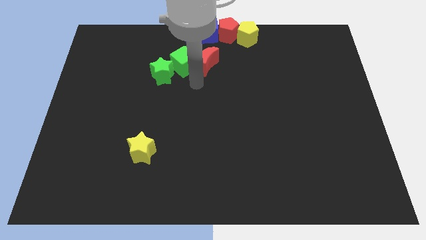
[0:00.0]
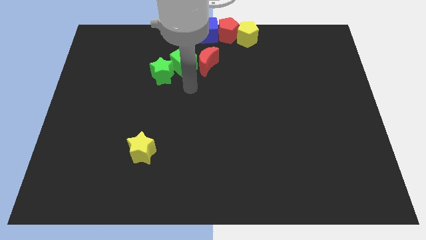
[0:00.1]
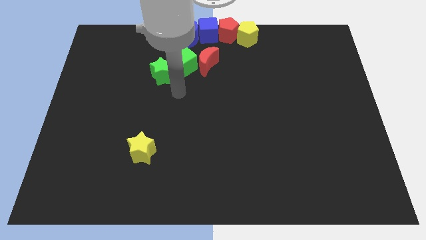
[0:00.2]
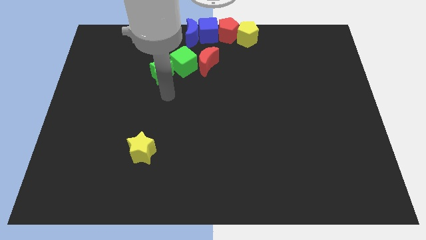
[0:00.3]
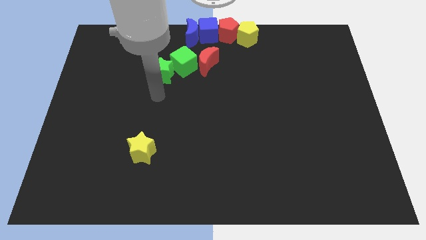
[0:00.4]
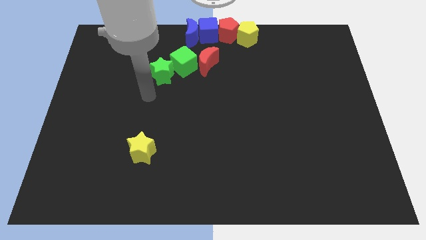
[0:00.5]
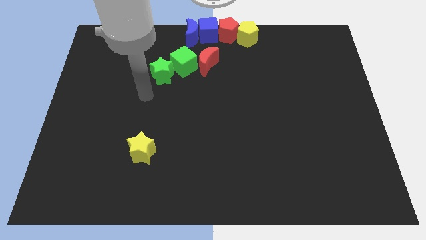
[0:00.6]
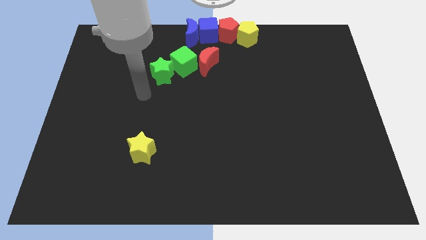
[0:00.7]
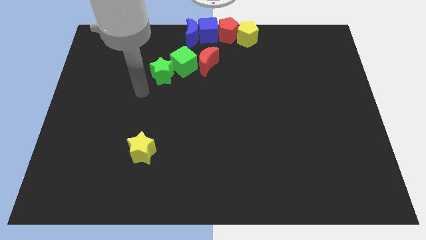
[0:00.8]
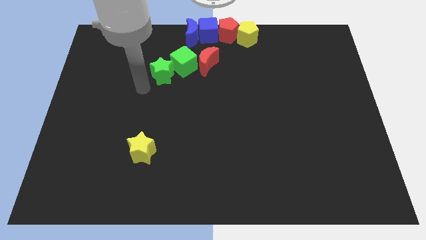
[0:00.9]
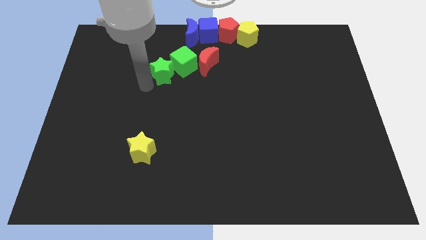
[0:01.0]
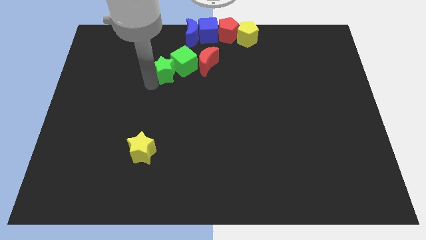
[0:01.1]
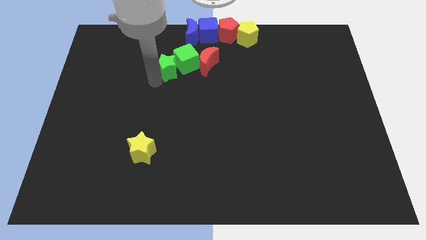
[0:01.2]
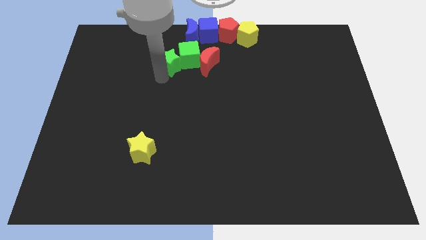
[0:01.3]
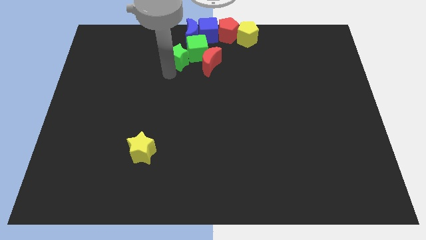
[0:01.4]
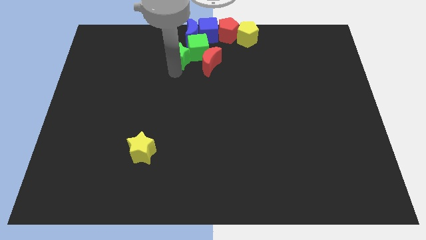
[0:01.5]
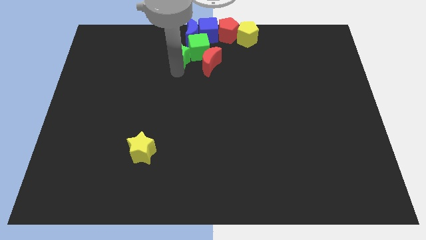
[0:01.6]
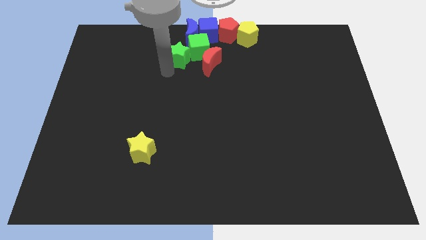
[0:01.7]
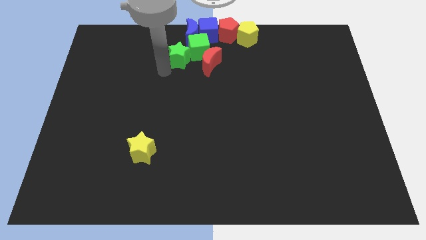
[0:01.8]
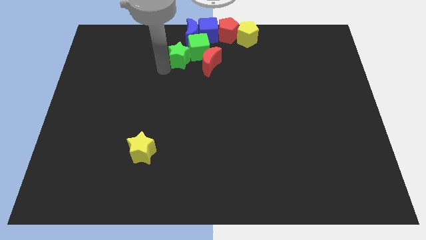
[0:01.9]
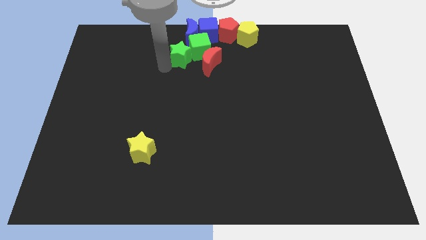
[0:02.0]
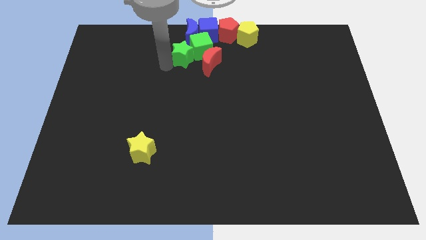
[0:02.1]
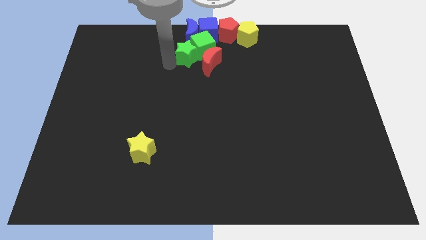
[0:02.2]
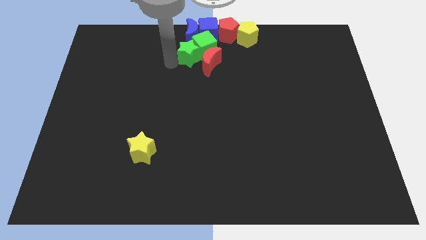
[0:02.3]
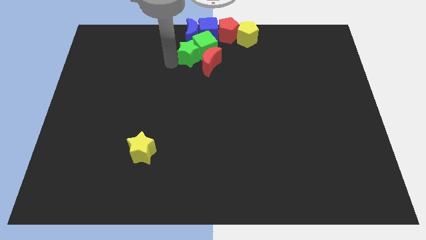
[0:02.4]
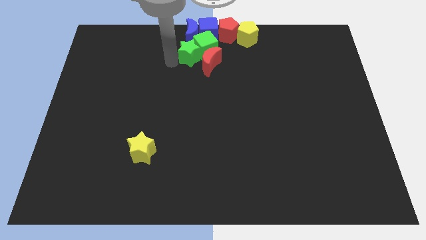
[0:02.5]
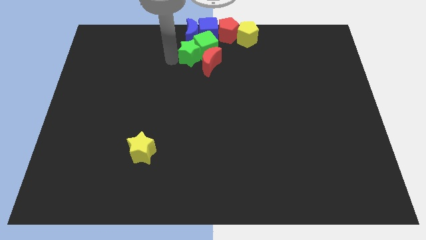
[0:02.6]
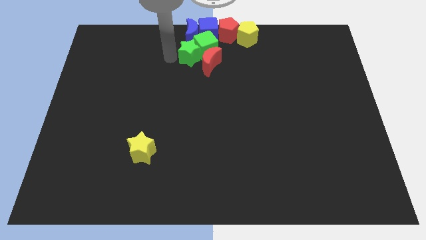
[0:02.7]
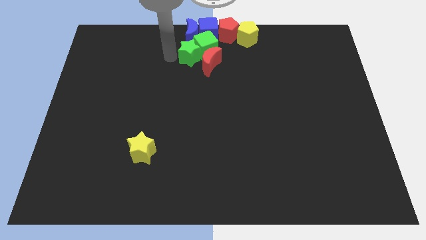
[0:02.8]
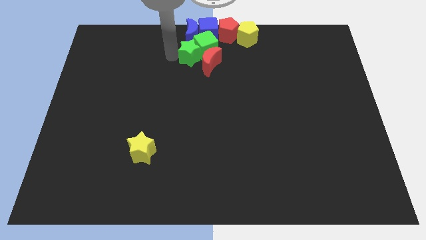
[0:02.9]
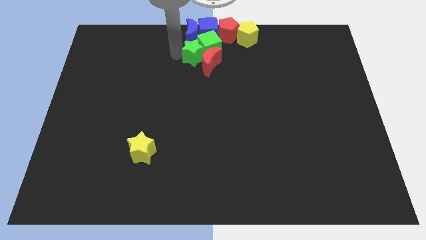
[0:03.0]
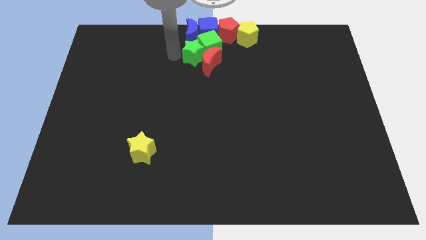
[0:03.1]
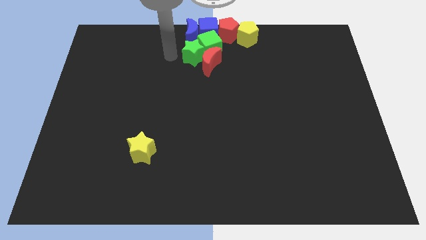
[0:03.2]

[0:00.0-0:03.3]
place the group of green blocks at the bottom of the group of blue blocks

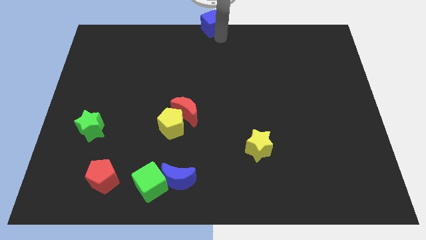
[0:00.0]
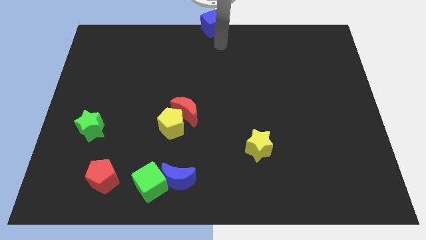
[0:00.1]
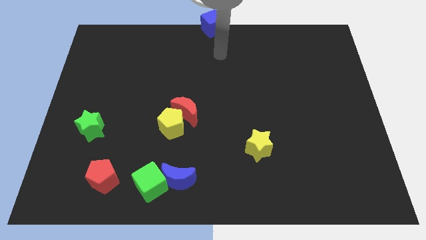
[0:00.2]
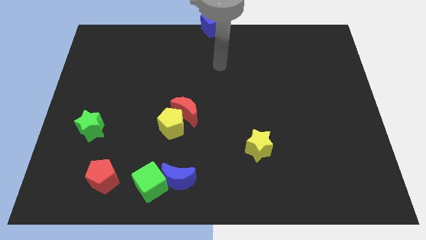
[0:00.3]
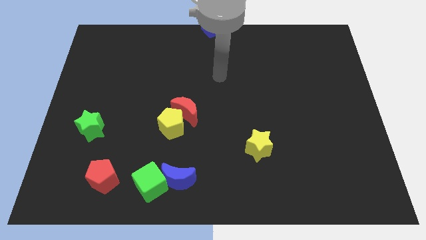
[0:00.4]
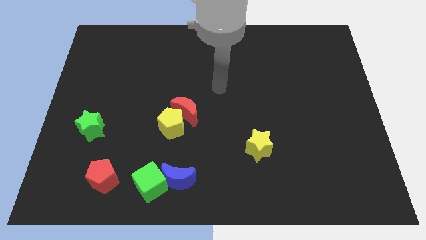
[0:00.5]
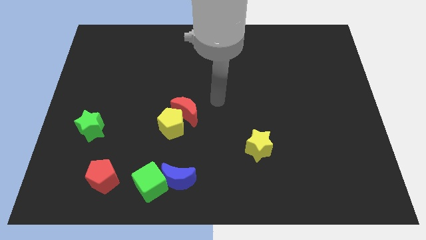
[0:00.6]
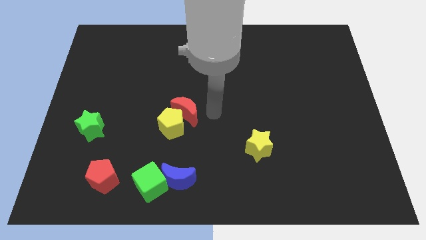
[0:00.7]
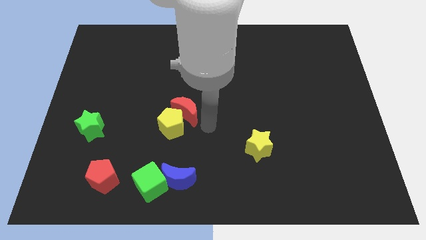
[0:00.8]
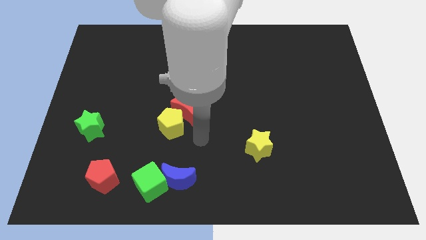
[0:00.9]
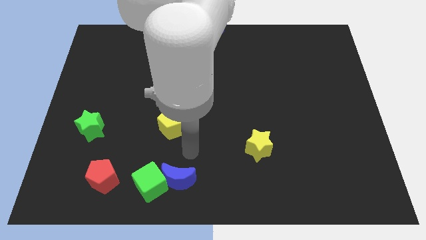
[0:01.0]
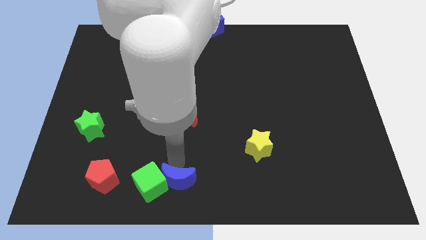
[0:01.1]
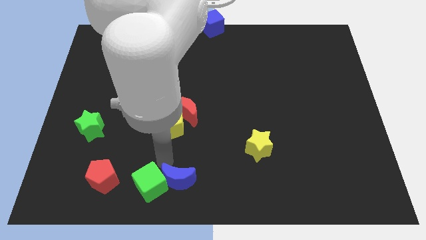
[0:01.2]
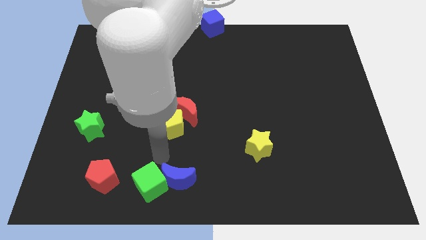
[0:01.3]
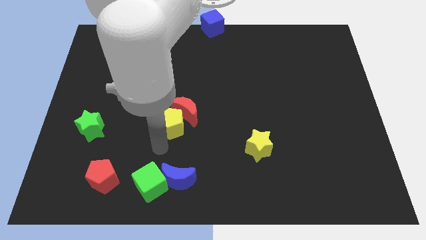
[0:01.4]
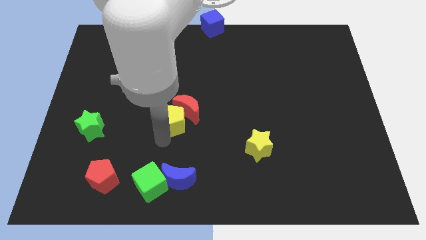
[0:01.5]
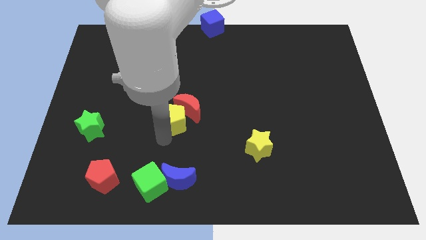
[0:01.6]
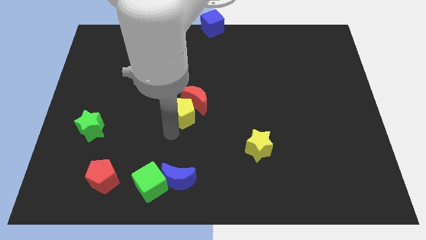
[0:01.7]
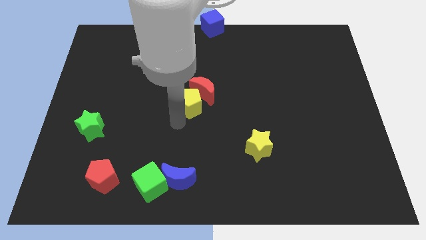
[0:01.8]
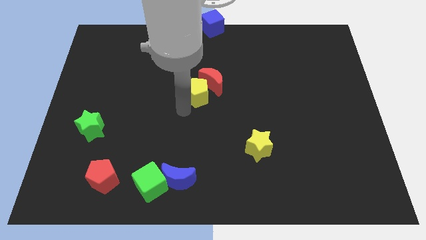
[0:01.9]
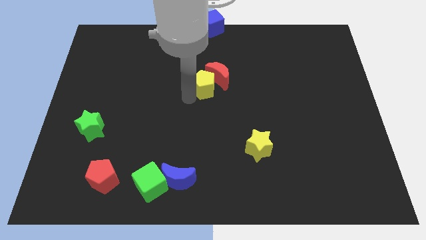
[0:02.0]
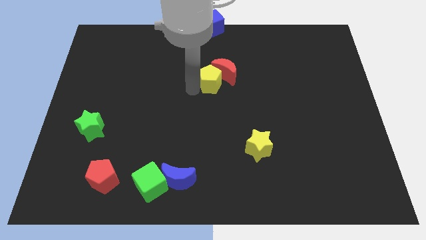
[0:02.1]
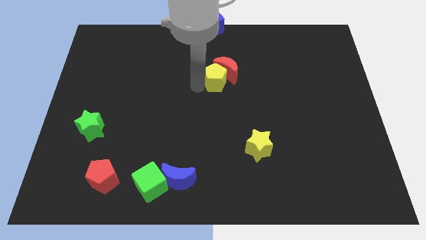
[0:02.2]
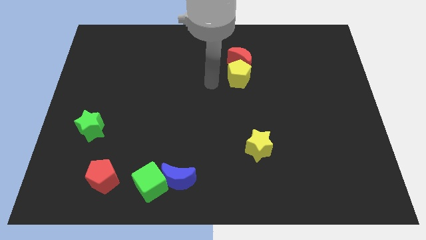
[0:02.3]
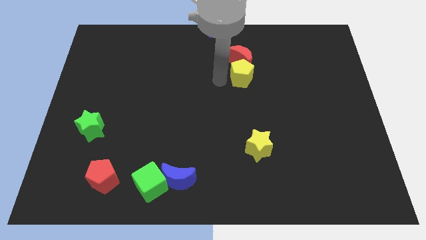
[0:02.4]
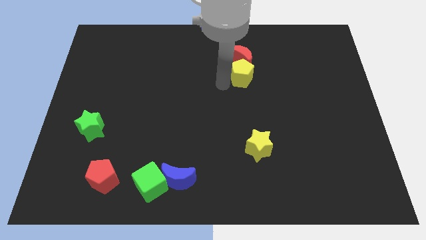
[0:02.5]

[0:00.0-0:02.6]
slightly move the yellow pentagon with a red moon down to the yellow star
